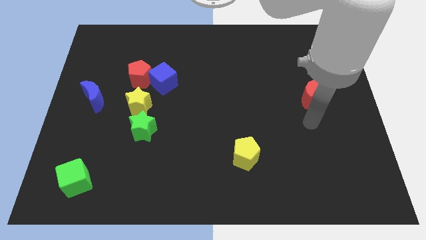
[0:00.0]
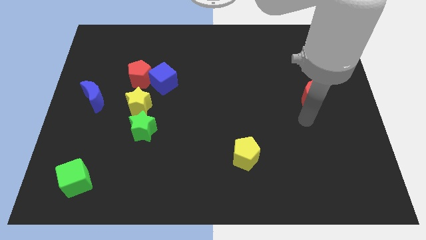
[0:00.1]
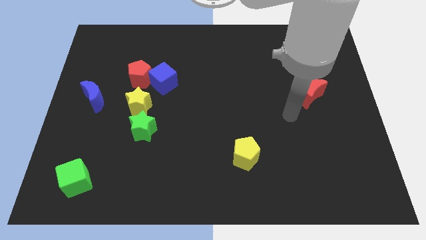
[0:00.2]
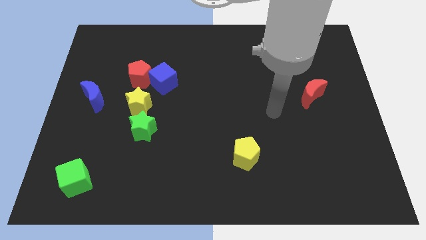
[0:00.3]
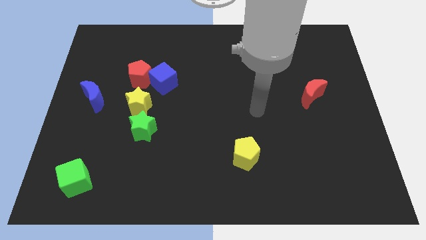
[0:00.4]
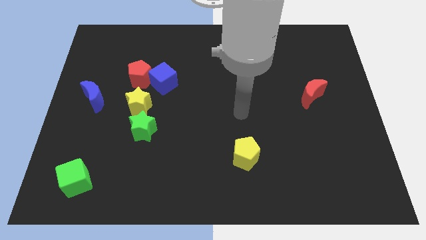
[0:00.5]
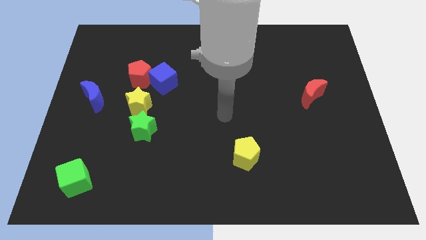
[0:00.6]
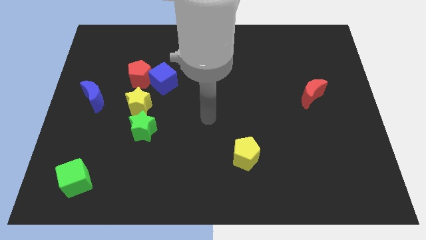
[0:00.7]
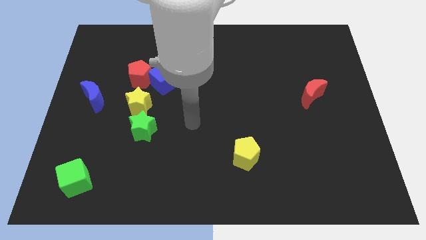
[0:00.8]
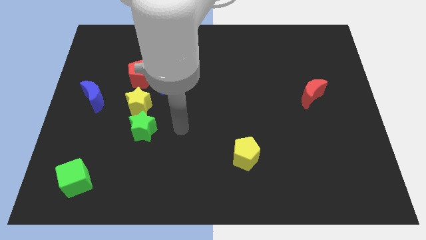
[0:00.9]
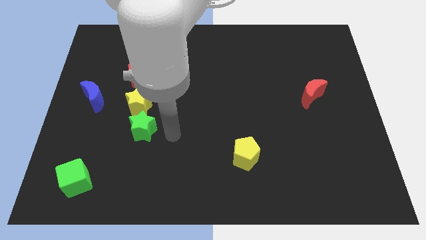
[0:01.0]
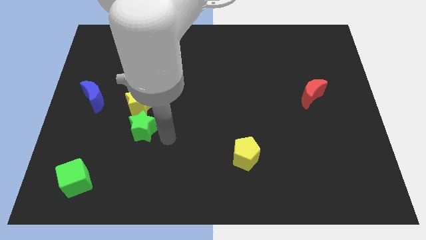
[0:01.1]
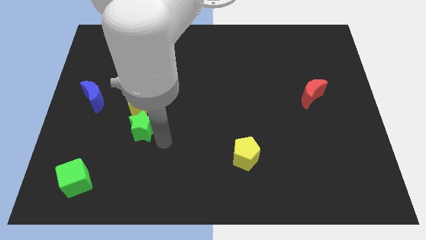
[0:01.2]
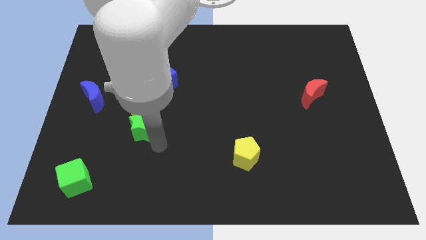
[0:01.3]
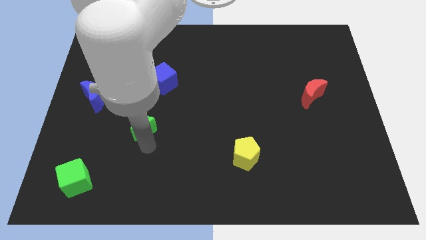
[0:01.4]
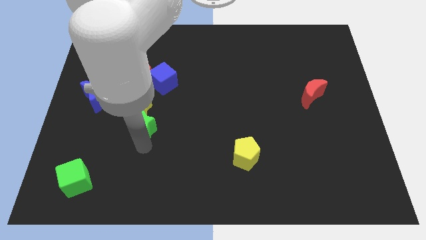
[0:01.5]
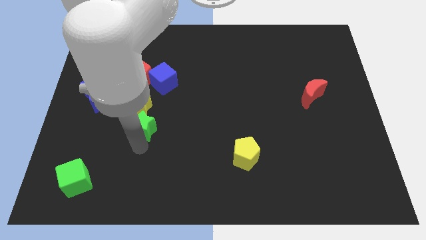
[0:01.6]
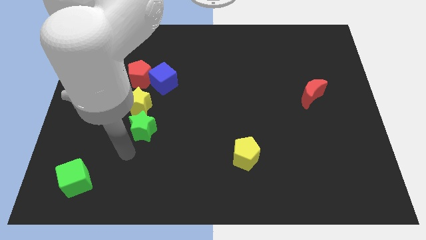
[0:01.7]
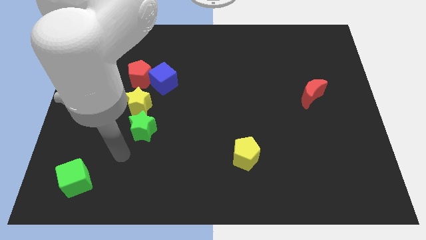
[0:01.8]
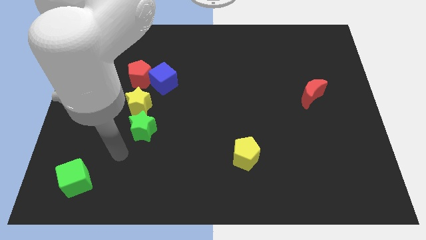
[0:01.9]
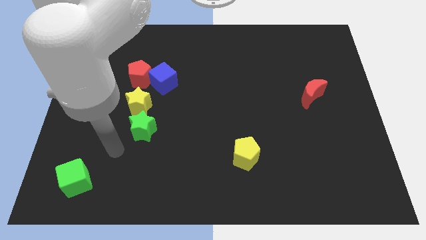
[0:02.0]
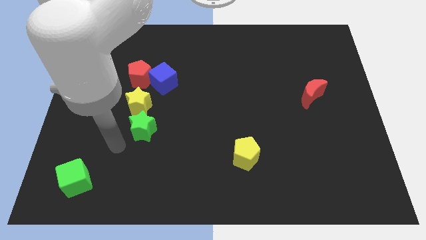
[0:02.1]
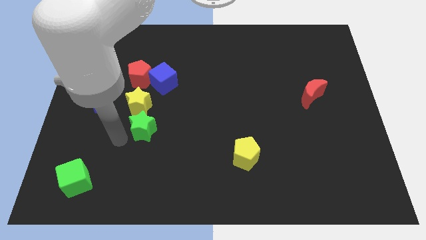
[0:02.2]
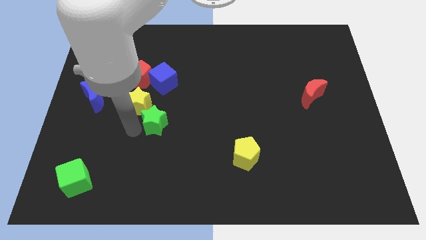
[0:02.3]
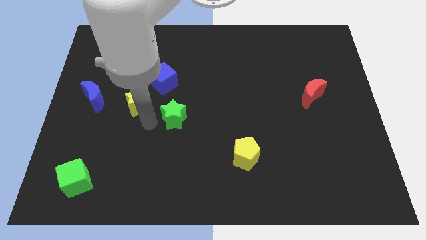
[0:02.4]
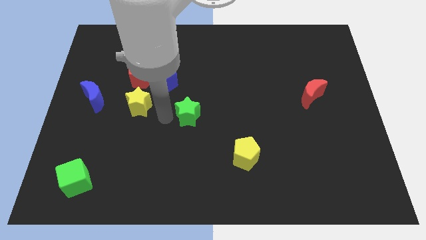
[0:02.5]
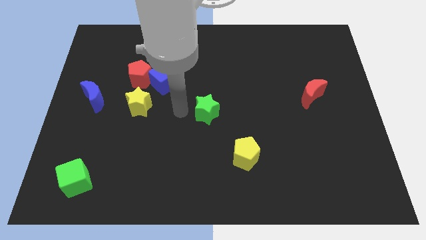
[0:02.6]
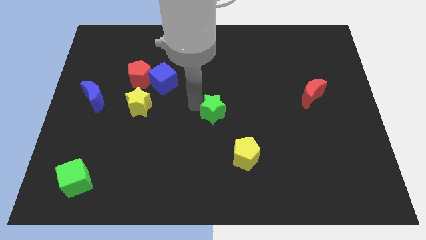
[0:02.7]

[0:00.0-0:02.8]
place the green star at the center of the board

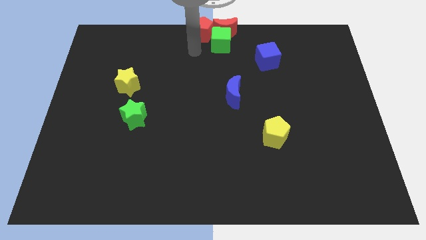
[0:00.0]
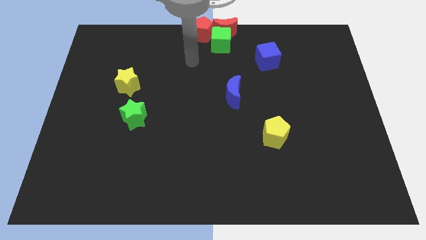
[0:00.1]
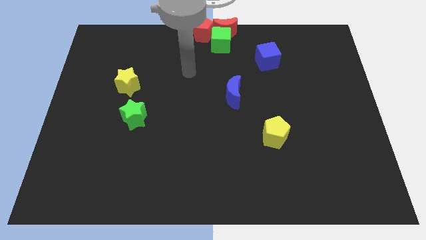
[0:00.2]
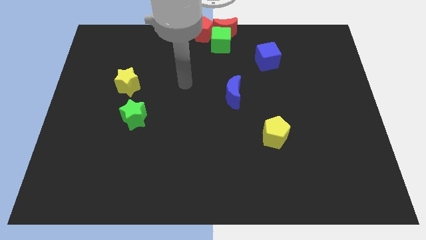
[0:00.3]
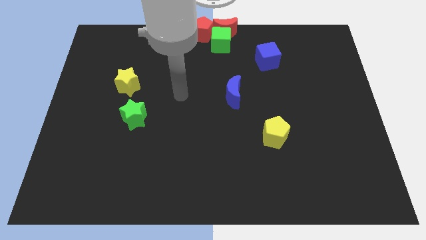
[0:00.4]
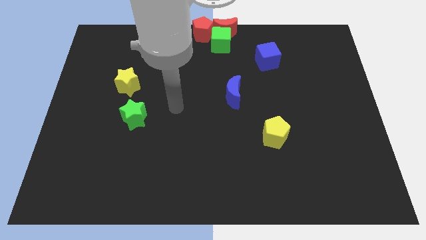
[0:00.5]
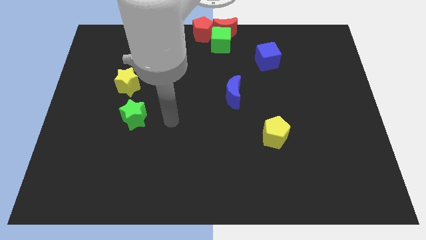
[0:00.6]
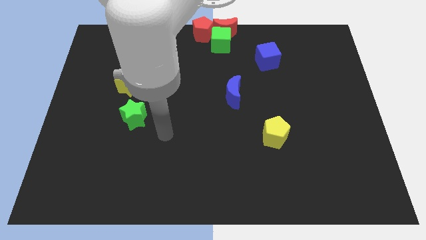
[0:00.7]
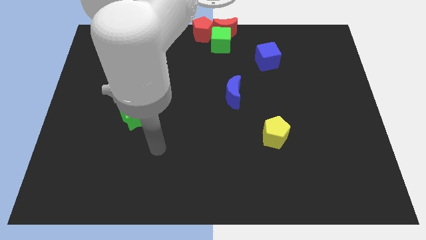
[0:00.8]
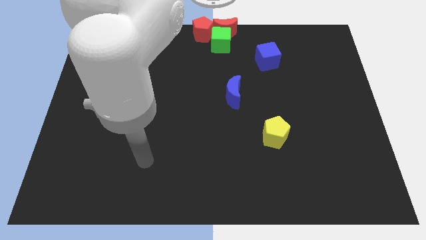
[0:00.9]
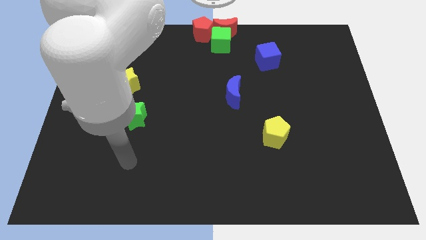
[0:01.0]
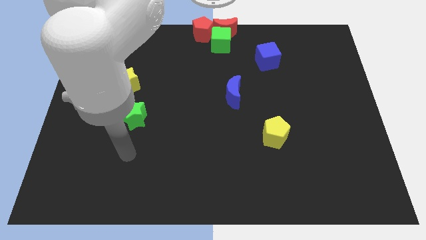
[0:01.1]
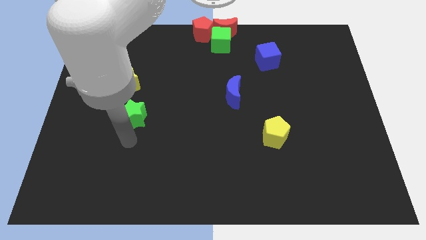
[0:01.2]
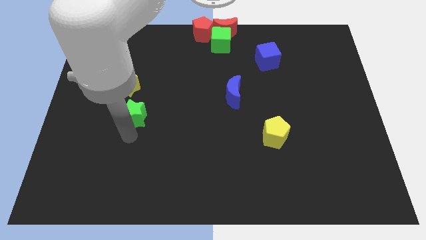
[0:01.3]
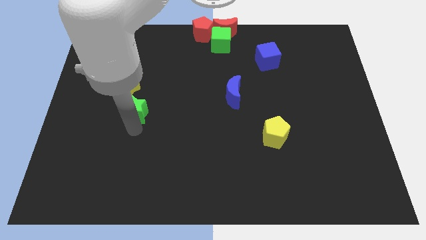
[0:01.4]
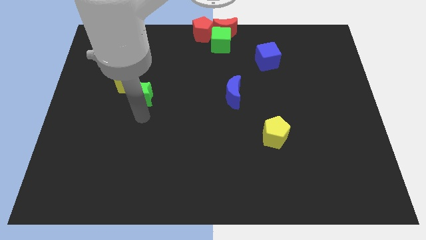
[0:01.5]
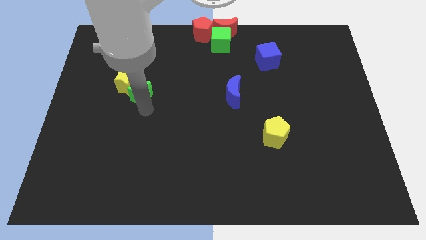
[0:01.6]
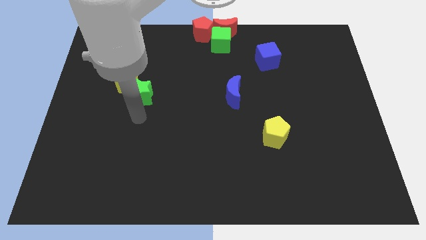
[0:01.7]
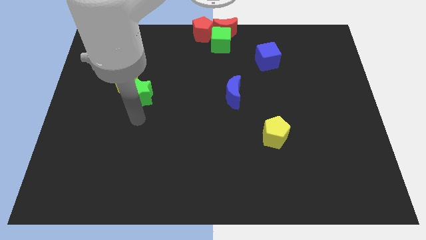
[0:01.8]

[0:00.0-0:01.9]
slightly push the green star upwards

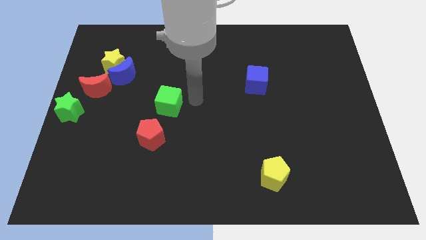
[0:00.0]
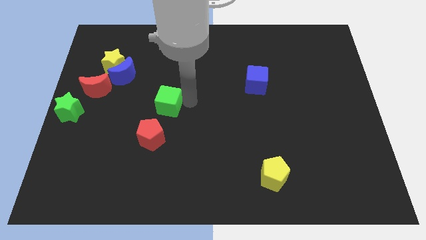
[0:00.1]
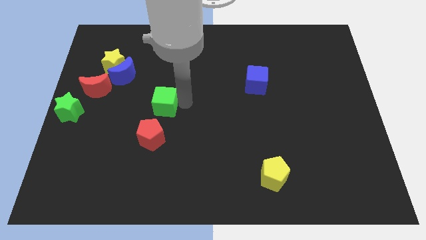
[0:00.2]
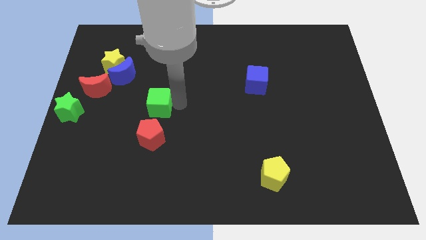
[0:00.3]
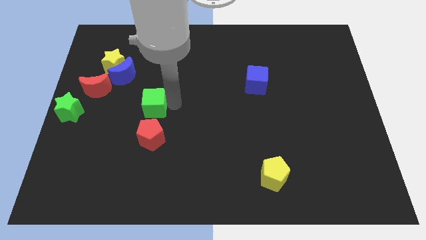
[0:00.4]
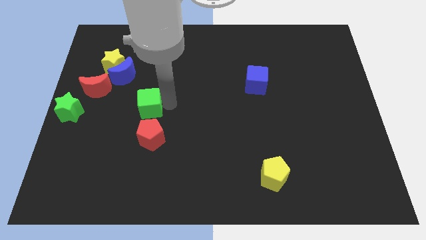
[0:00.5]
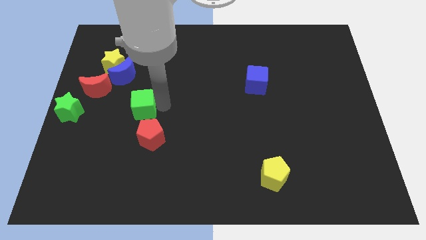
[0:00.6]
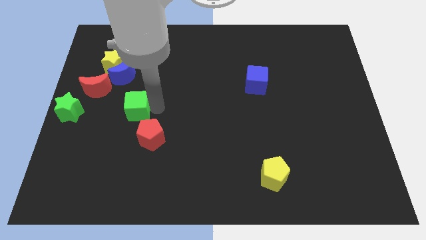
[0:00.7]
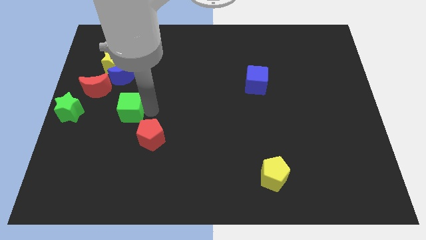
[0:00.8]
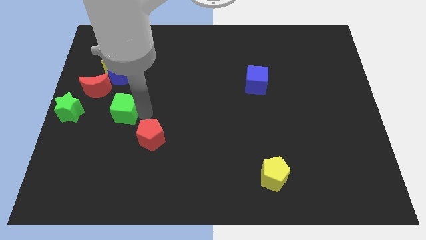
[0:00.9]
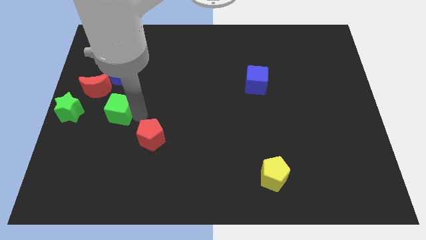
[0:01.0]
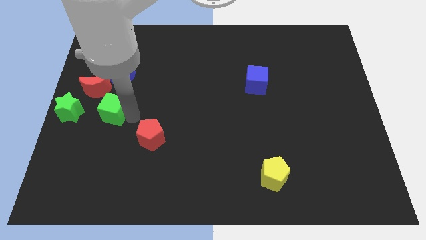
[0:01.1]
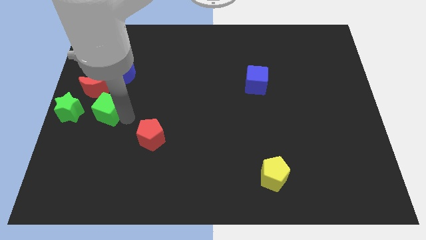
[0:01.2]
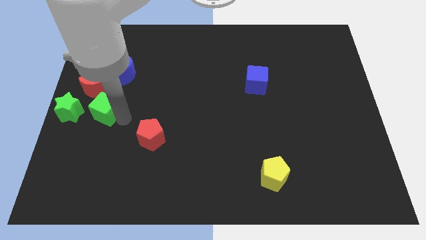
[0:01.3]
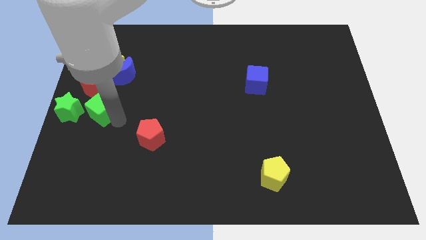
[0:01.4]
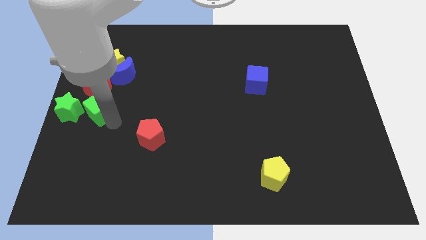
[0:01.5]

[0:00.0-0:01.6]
place the green cube to the bottom of the red moon

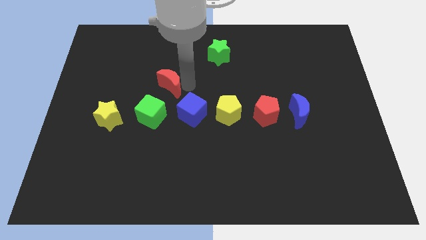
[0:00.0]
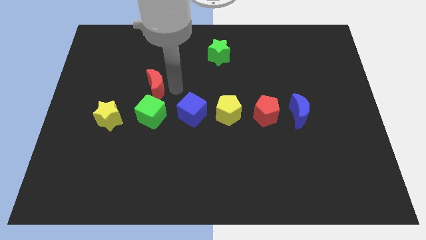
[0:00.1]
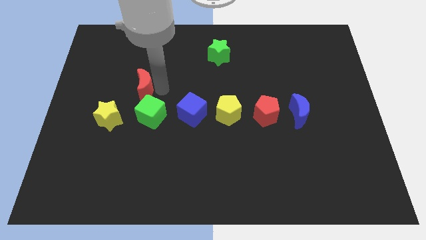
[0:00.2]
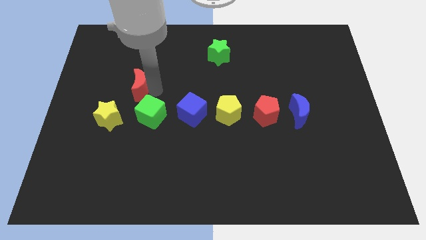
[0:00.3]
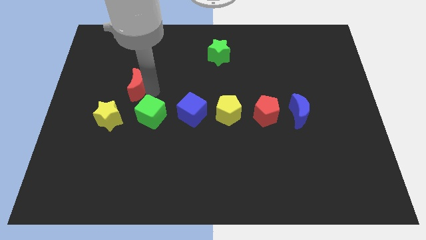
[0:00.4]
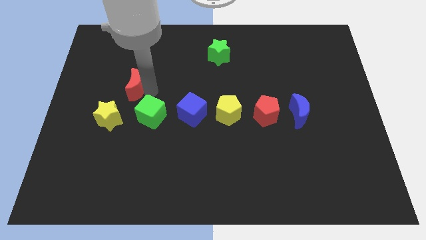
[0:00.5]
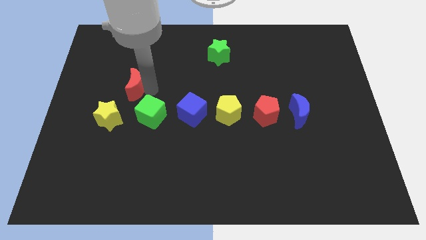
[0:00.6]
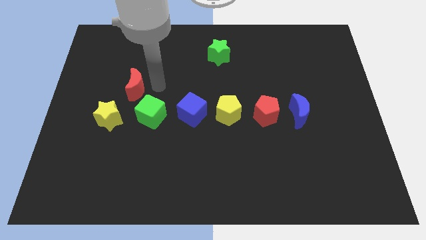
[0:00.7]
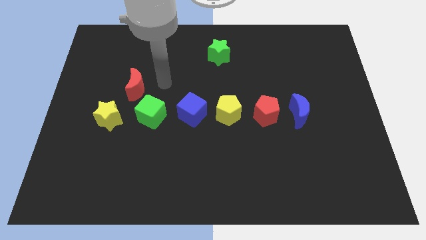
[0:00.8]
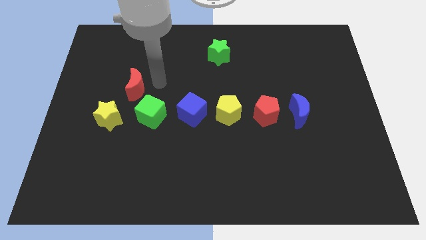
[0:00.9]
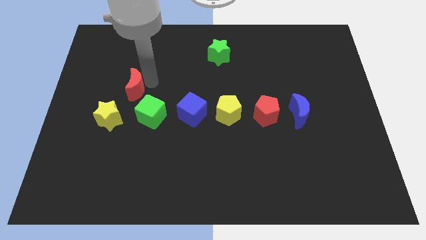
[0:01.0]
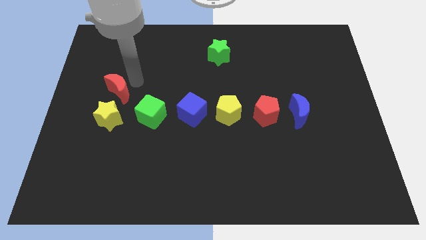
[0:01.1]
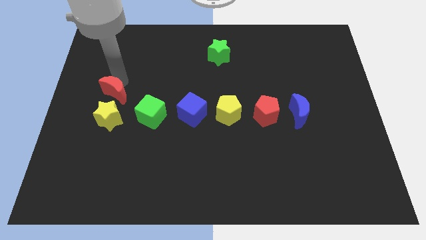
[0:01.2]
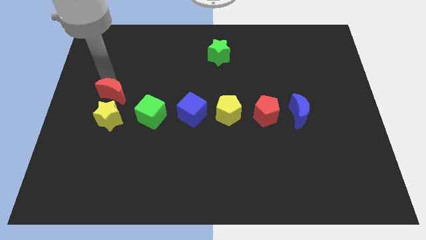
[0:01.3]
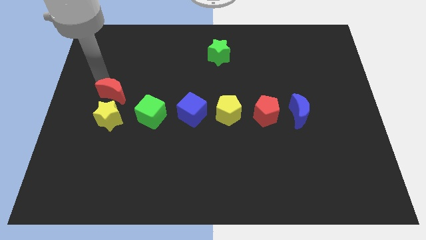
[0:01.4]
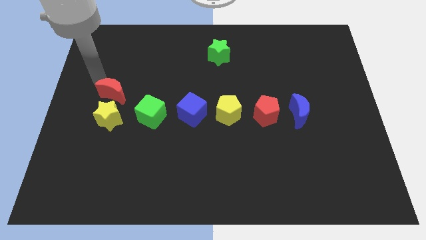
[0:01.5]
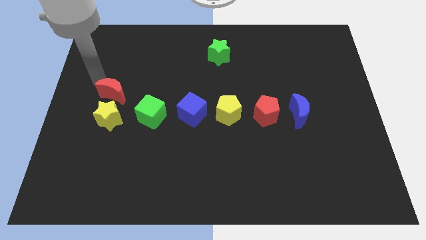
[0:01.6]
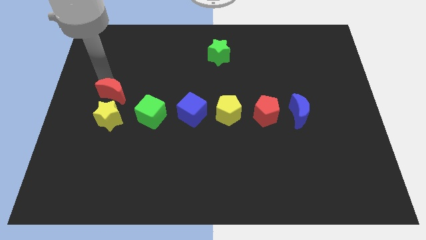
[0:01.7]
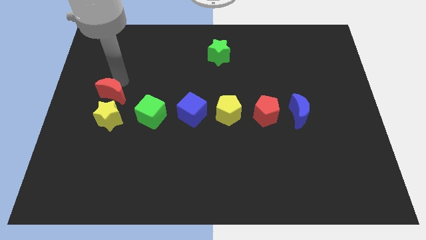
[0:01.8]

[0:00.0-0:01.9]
move the red crescent close to the yellow star

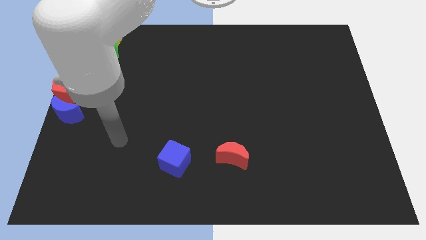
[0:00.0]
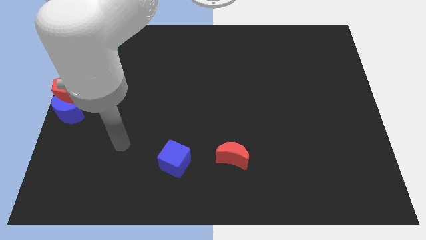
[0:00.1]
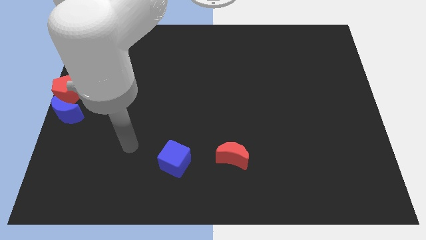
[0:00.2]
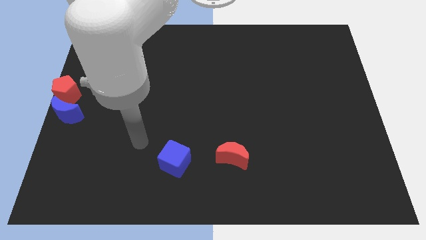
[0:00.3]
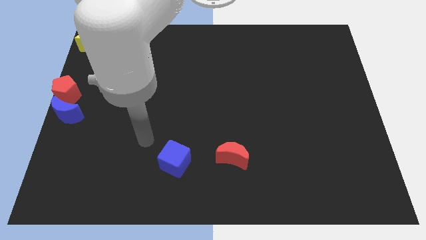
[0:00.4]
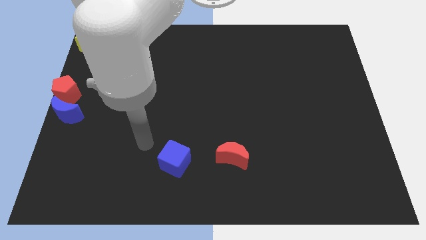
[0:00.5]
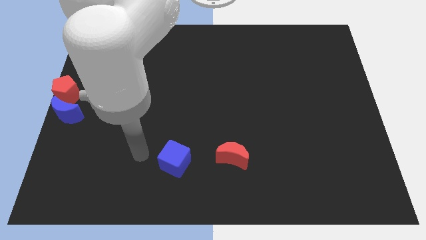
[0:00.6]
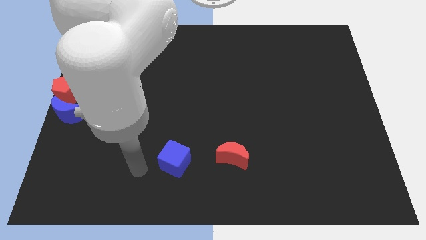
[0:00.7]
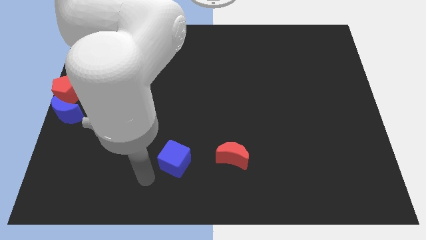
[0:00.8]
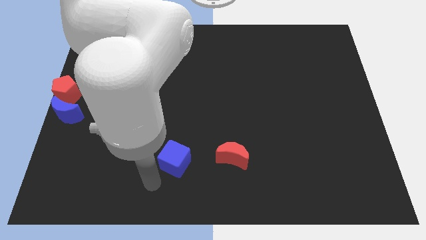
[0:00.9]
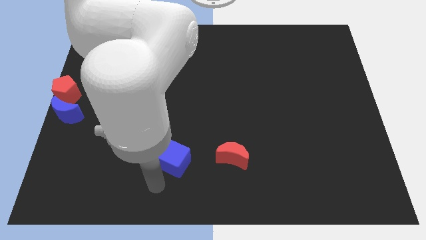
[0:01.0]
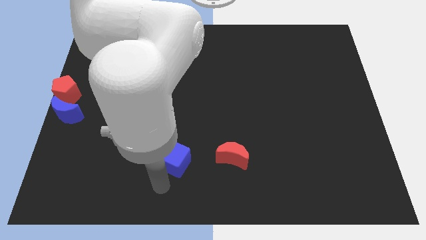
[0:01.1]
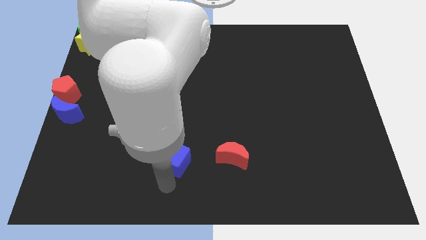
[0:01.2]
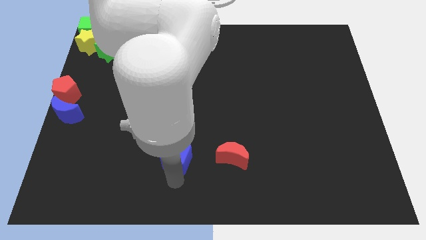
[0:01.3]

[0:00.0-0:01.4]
move your hand vertically below the blue cube
